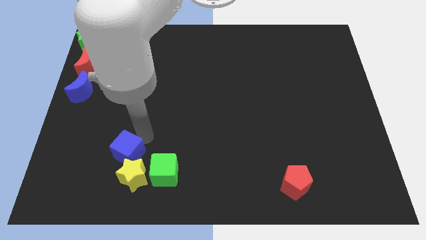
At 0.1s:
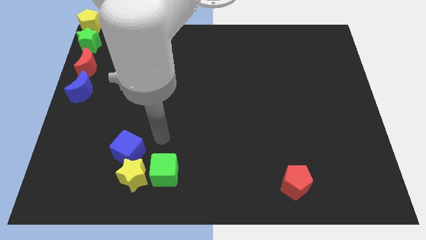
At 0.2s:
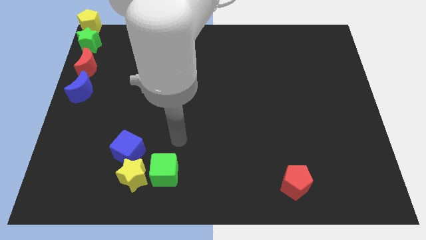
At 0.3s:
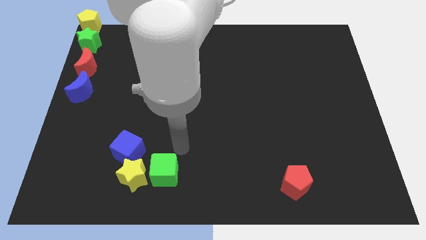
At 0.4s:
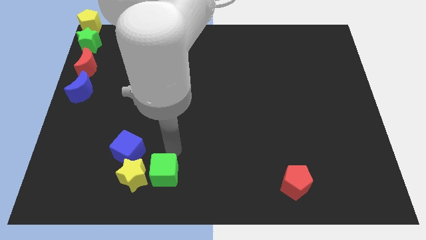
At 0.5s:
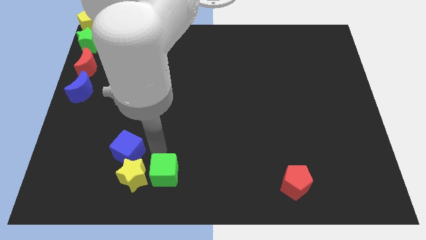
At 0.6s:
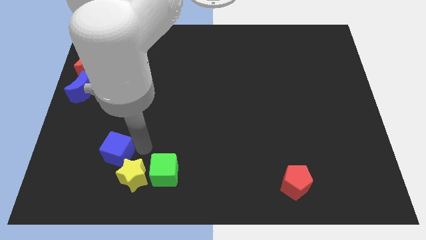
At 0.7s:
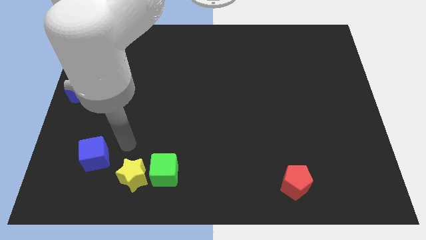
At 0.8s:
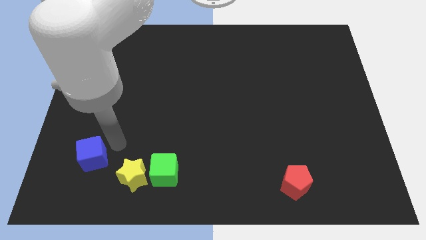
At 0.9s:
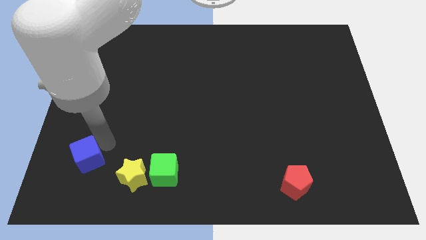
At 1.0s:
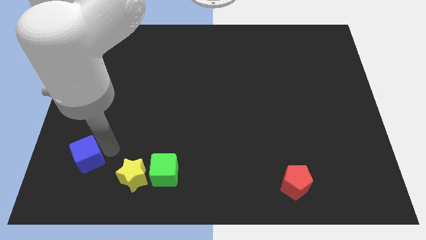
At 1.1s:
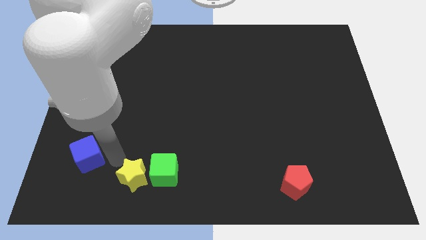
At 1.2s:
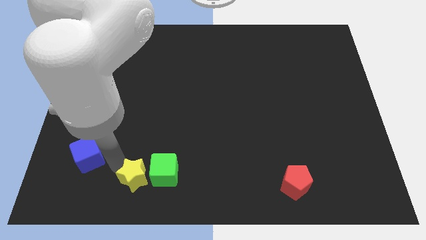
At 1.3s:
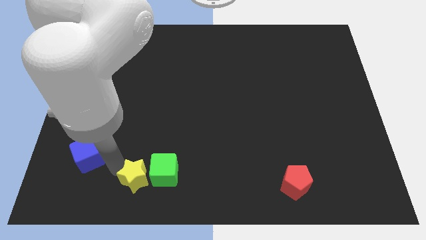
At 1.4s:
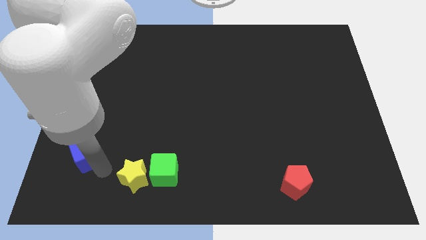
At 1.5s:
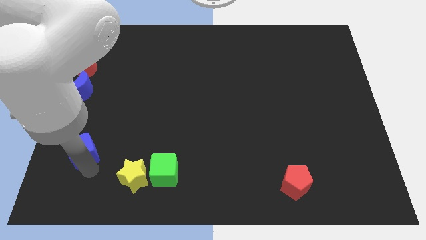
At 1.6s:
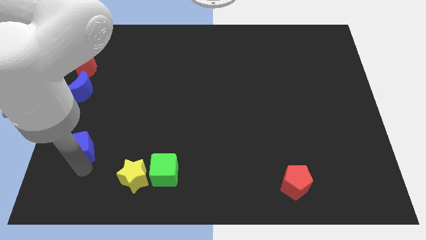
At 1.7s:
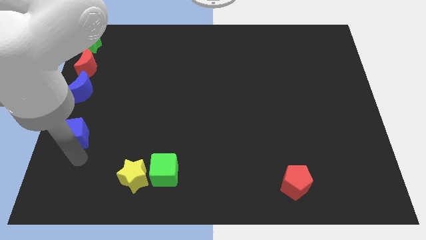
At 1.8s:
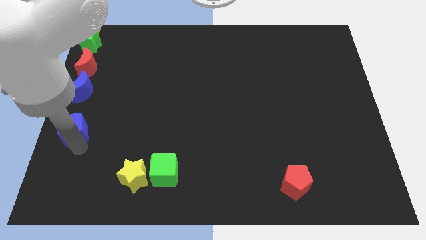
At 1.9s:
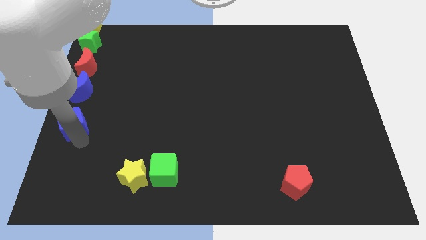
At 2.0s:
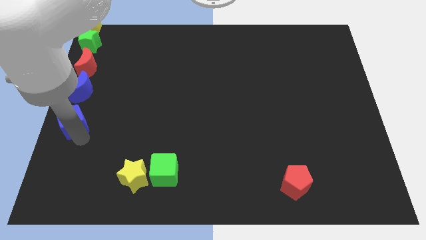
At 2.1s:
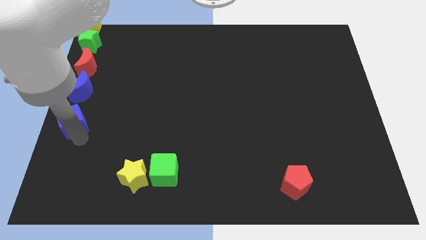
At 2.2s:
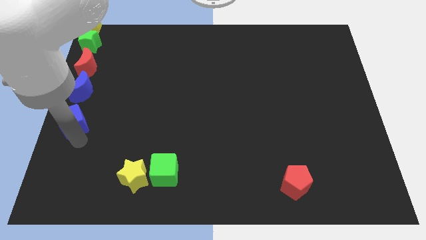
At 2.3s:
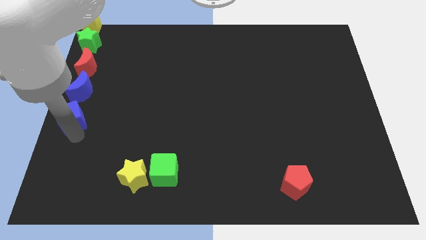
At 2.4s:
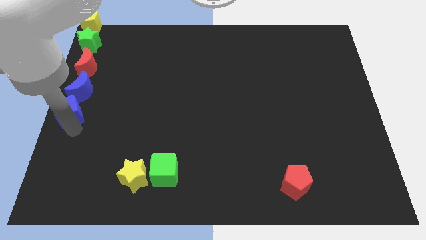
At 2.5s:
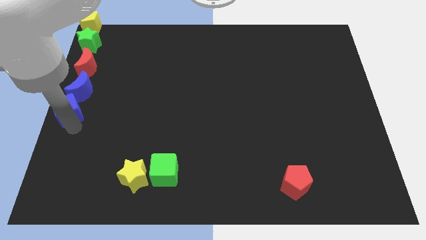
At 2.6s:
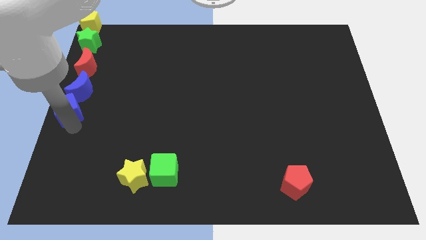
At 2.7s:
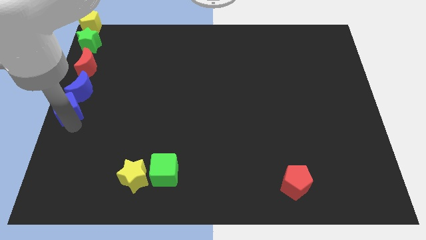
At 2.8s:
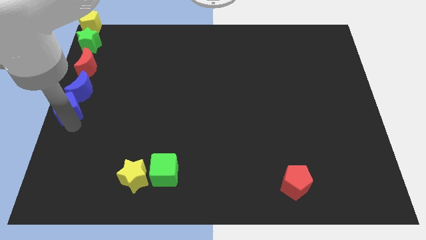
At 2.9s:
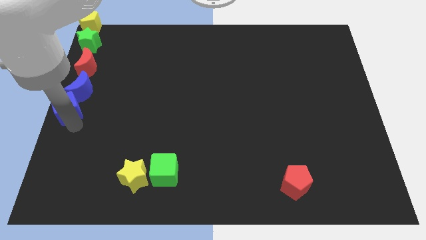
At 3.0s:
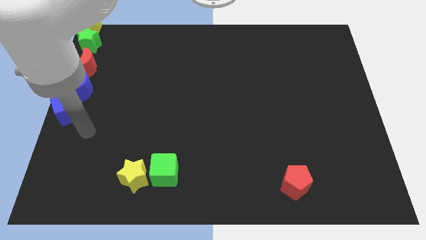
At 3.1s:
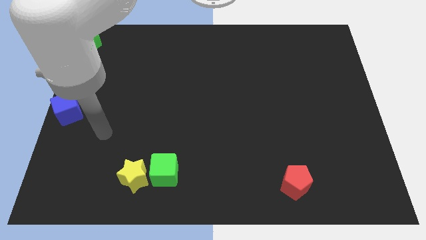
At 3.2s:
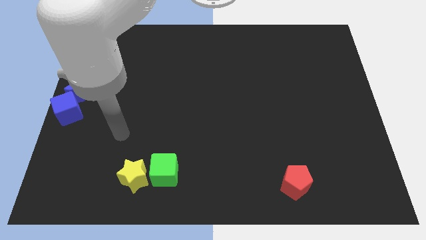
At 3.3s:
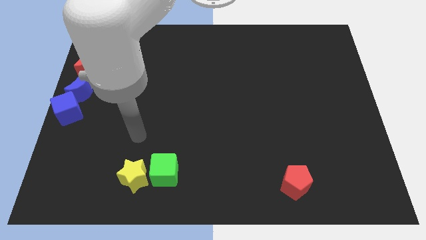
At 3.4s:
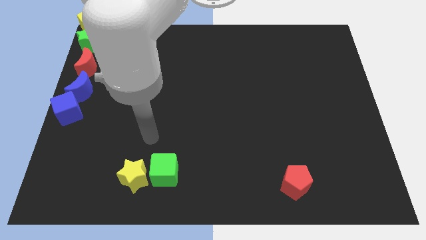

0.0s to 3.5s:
put the blue blocks together

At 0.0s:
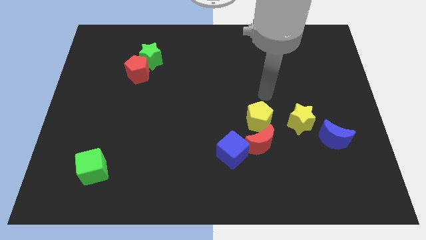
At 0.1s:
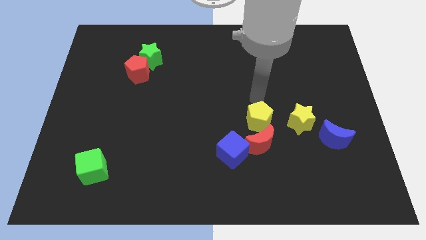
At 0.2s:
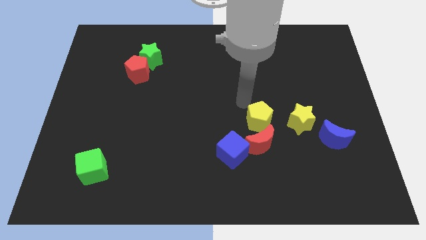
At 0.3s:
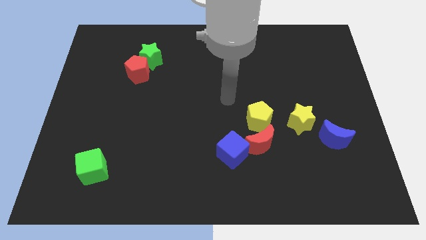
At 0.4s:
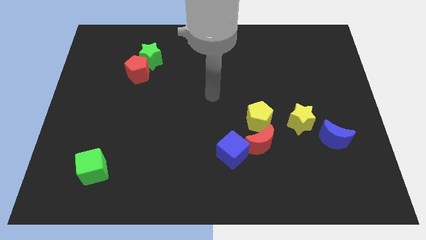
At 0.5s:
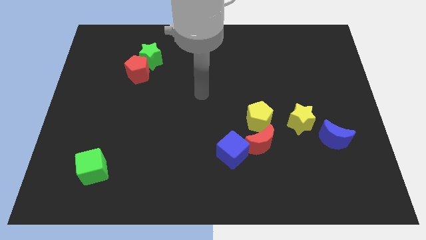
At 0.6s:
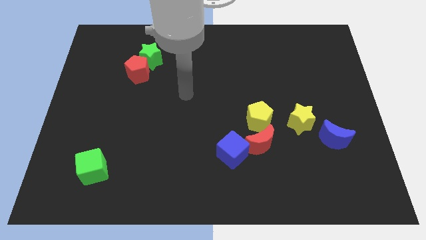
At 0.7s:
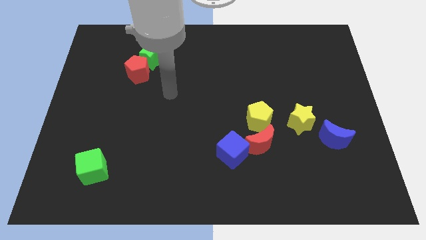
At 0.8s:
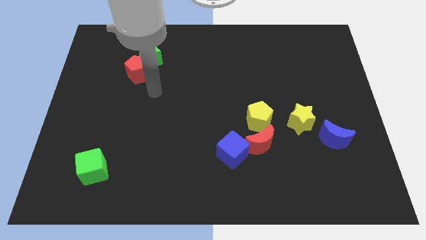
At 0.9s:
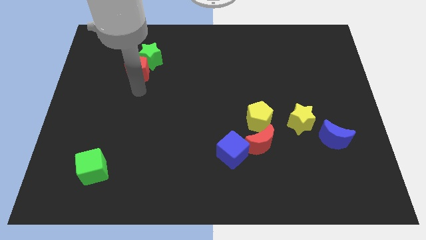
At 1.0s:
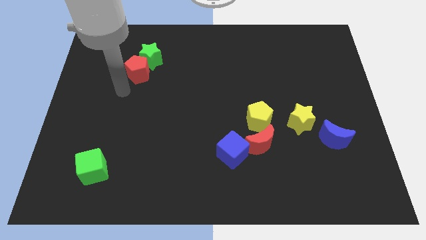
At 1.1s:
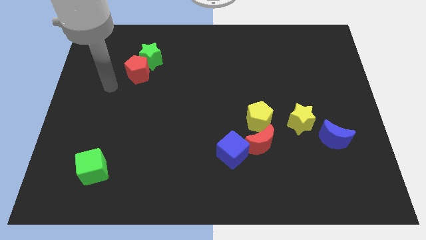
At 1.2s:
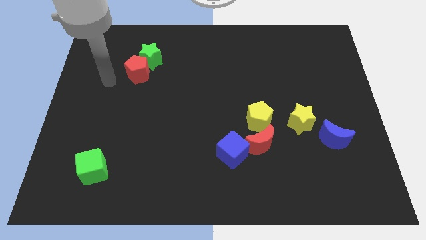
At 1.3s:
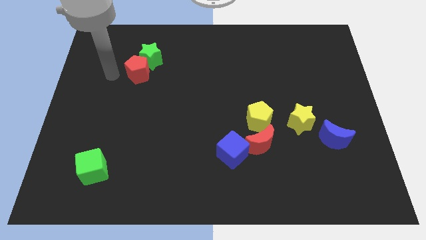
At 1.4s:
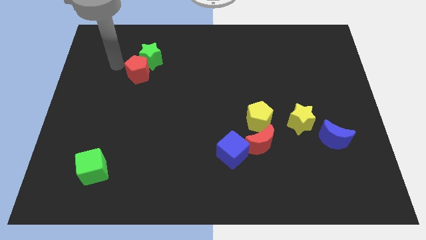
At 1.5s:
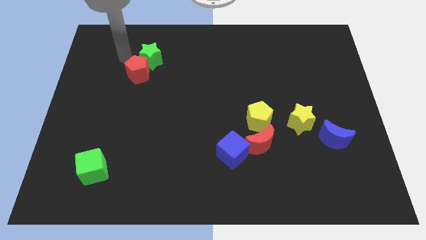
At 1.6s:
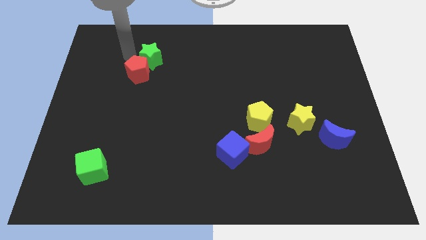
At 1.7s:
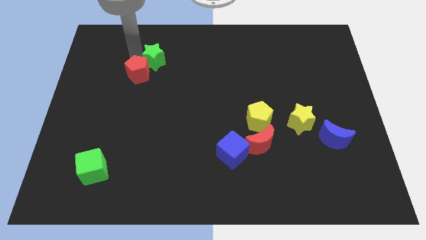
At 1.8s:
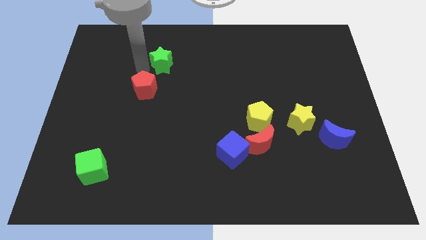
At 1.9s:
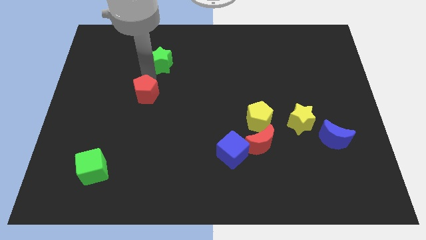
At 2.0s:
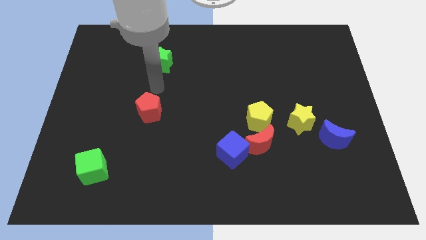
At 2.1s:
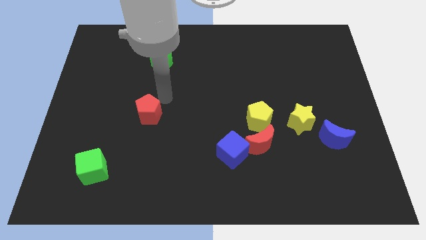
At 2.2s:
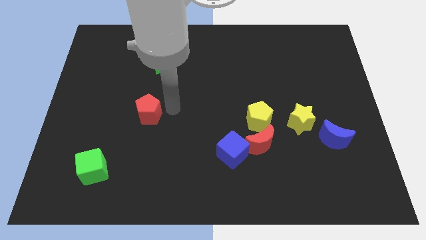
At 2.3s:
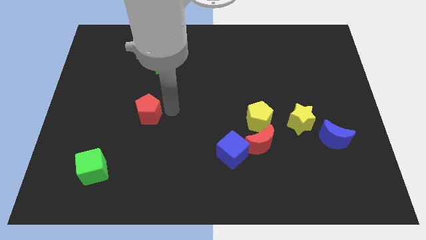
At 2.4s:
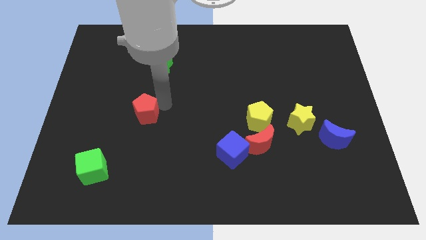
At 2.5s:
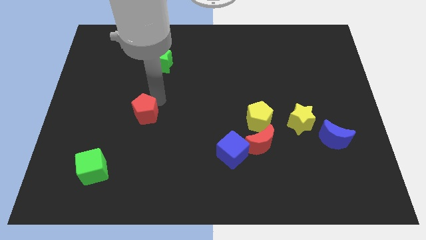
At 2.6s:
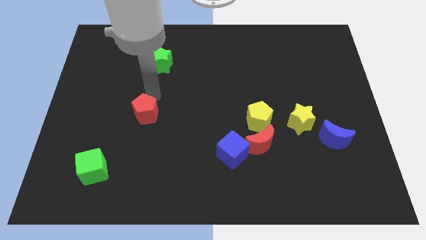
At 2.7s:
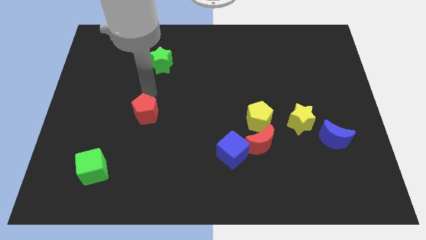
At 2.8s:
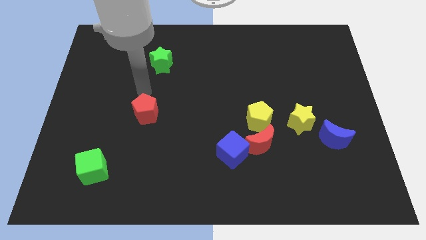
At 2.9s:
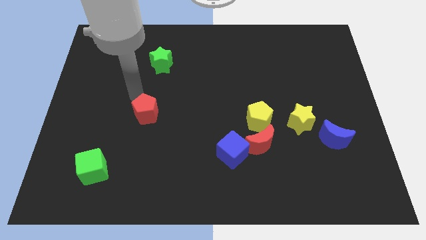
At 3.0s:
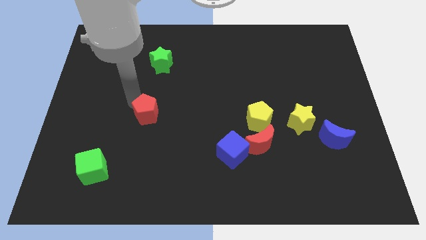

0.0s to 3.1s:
push the red pentagon away from the green star

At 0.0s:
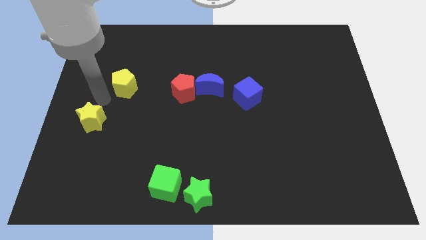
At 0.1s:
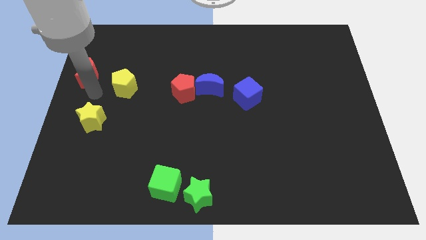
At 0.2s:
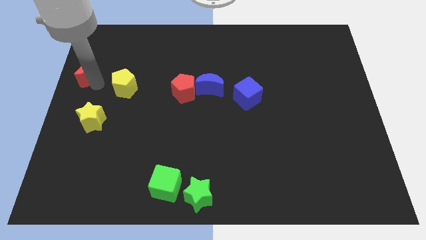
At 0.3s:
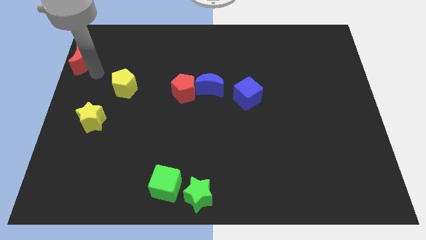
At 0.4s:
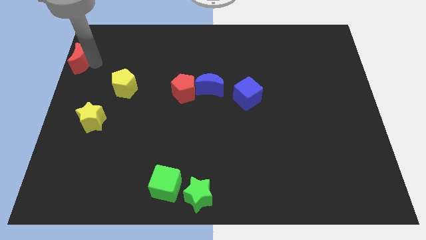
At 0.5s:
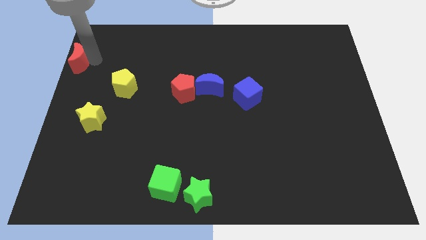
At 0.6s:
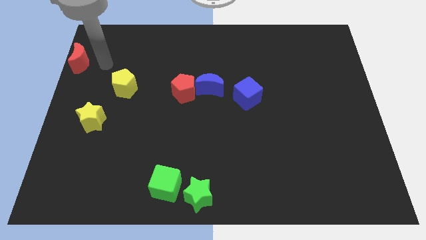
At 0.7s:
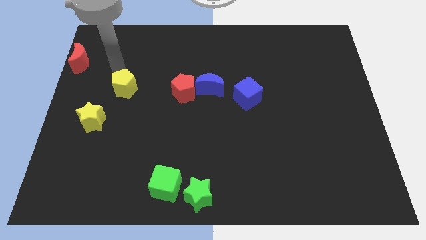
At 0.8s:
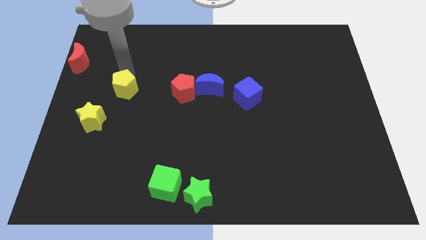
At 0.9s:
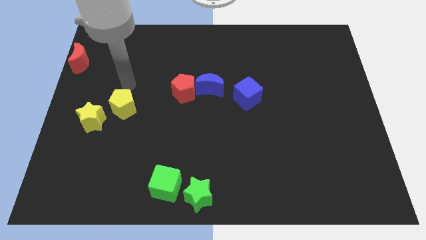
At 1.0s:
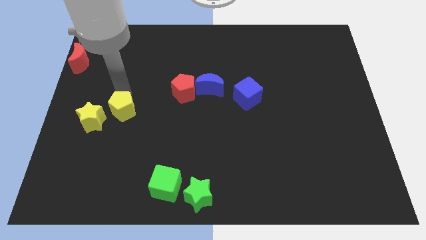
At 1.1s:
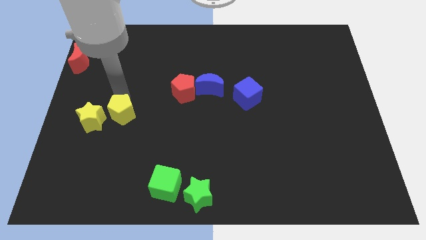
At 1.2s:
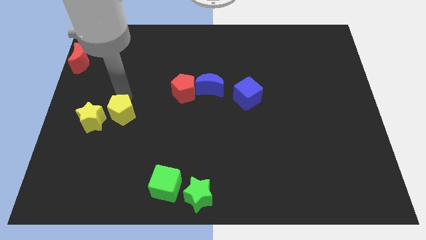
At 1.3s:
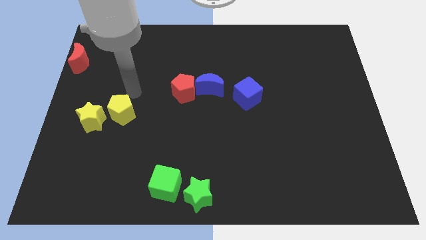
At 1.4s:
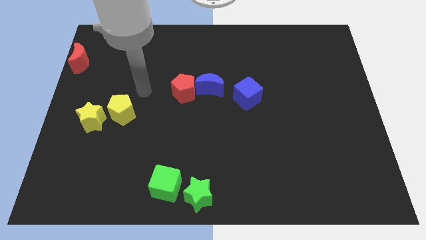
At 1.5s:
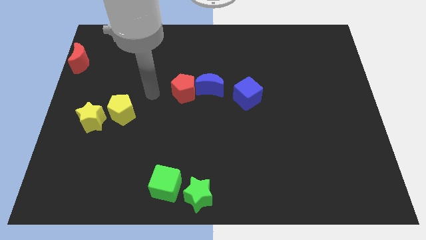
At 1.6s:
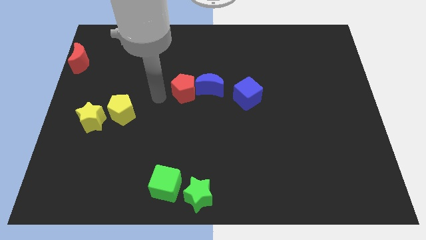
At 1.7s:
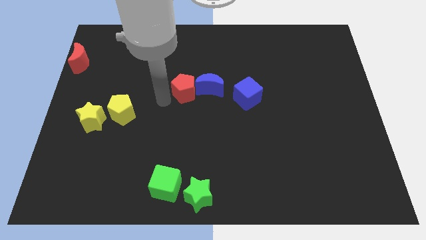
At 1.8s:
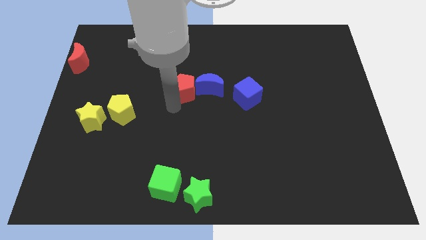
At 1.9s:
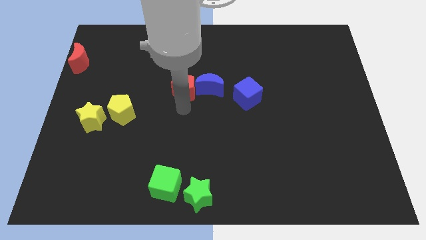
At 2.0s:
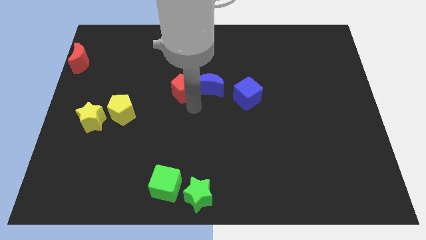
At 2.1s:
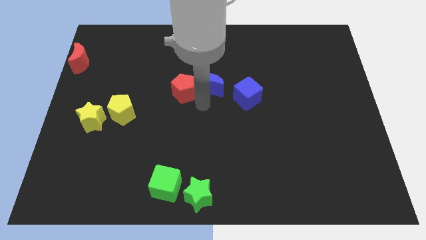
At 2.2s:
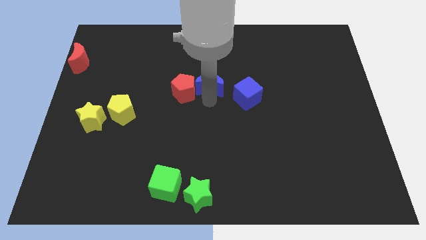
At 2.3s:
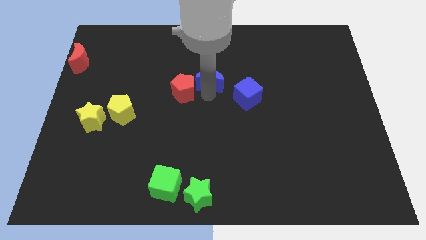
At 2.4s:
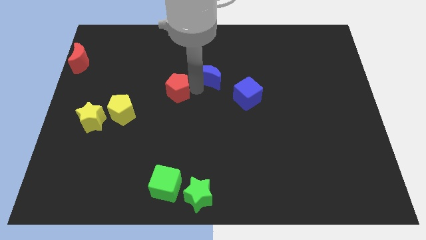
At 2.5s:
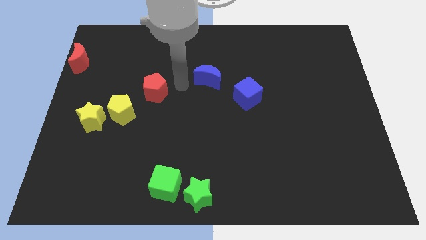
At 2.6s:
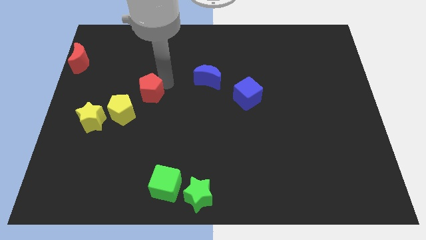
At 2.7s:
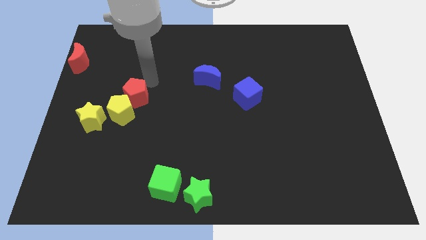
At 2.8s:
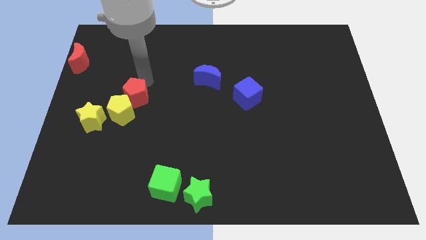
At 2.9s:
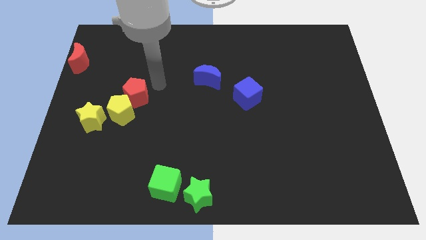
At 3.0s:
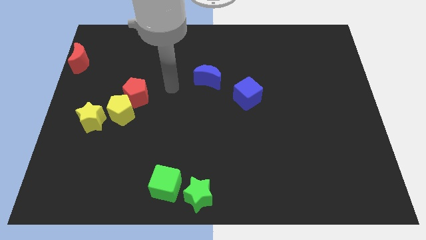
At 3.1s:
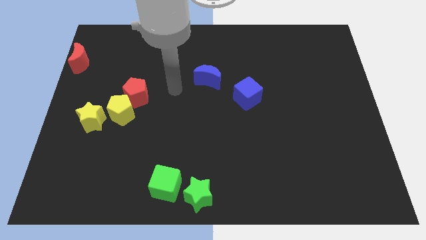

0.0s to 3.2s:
place the red pentagon into the right of the yellow pentagon
